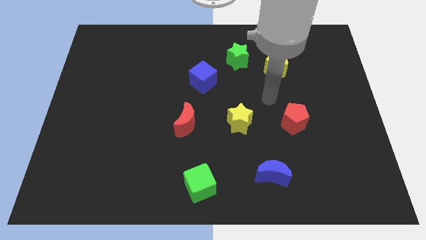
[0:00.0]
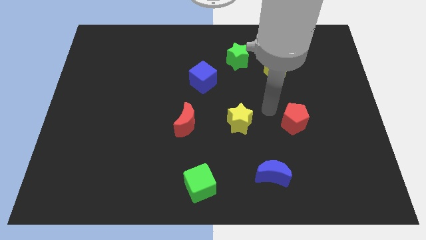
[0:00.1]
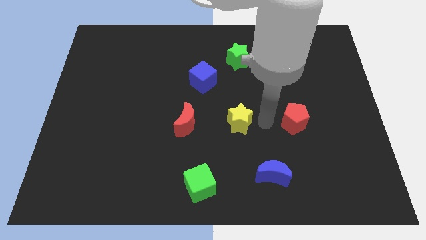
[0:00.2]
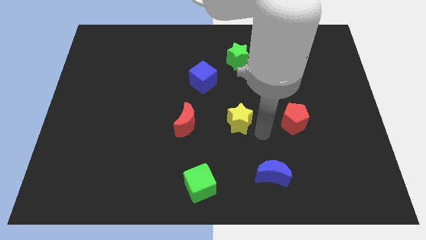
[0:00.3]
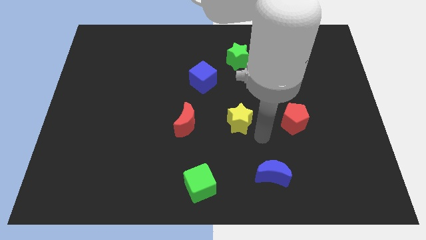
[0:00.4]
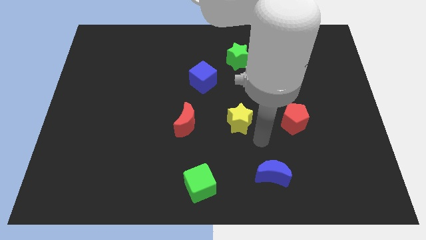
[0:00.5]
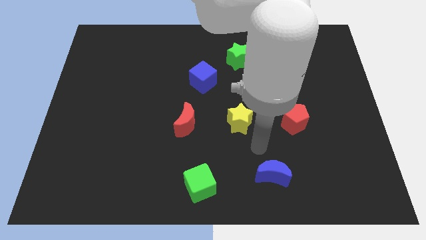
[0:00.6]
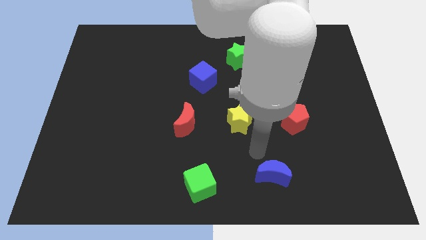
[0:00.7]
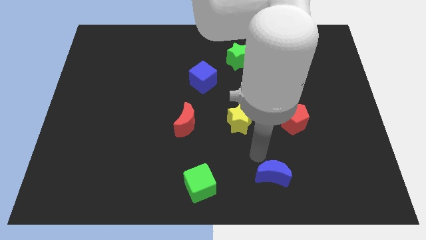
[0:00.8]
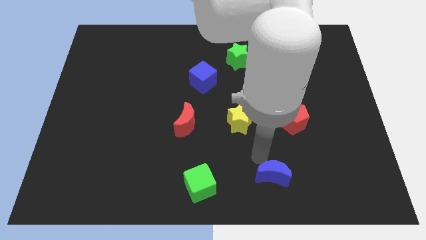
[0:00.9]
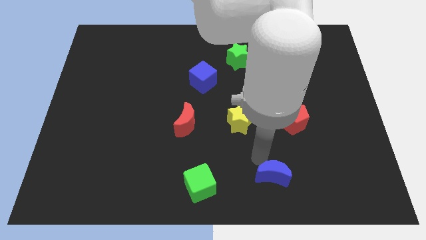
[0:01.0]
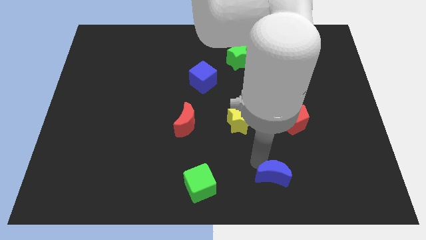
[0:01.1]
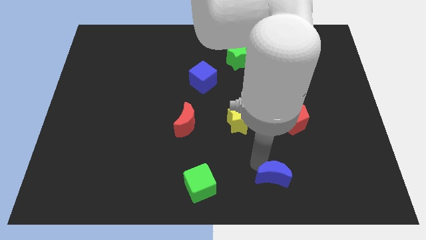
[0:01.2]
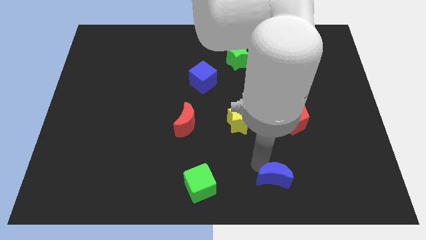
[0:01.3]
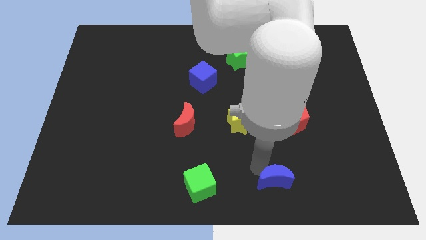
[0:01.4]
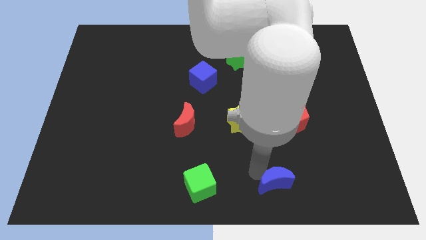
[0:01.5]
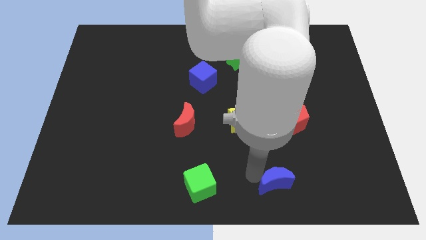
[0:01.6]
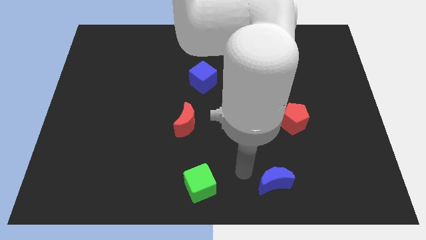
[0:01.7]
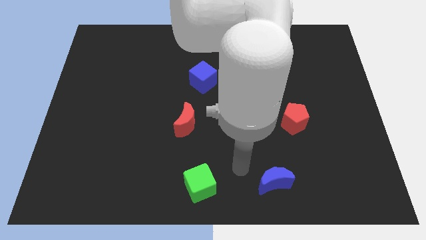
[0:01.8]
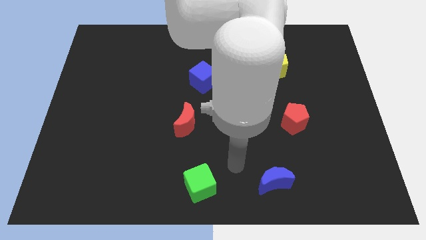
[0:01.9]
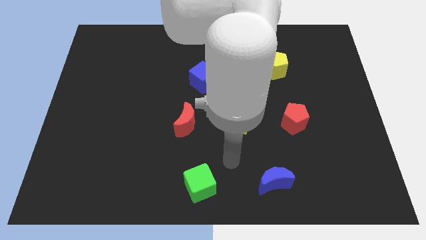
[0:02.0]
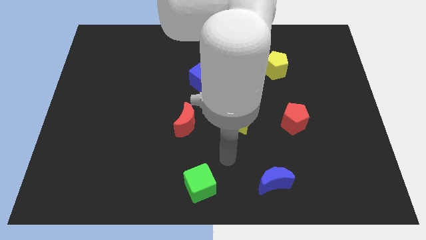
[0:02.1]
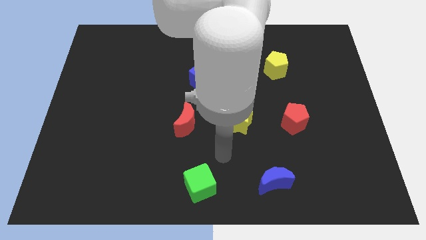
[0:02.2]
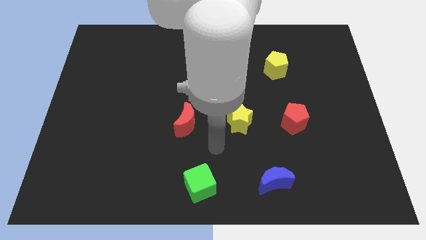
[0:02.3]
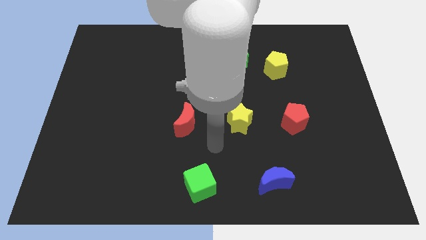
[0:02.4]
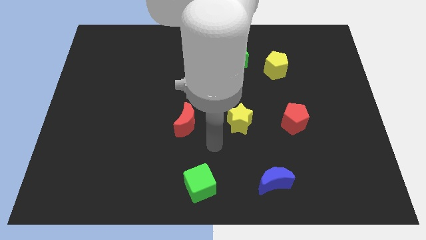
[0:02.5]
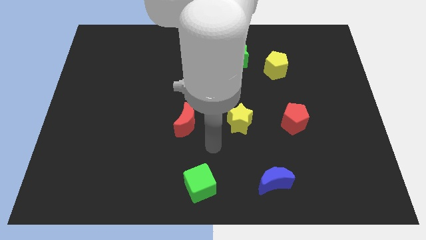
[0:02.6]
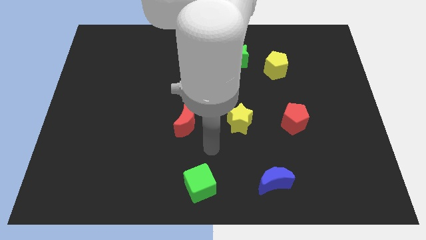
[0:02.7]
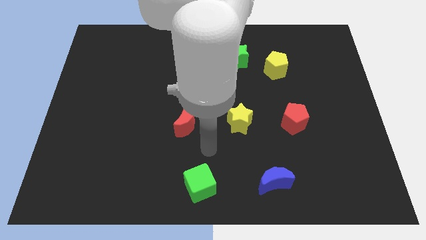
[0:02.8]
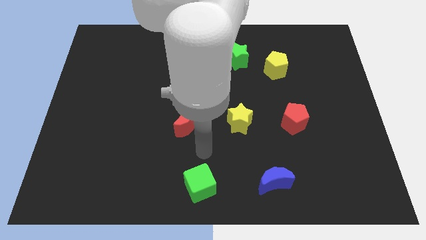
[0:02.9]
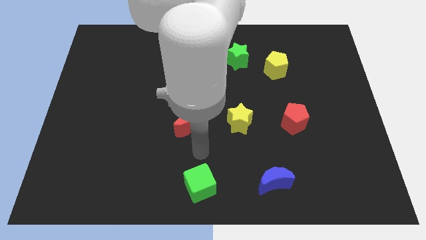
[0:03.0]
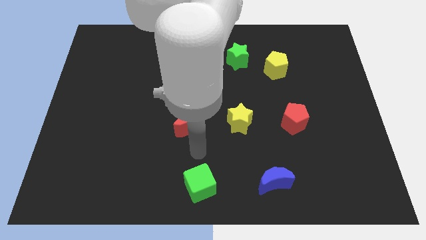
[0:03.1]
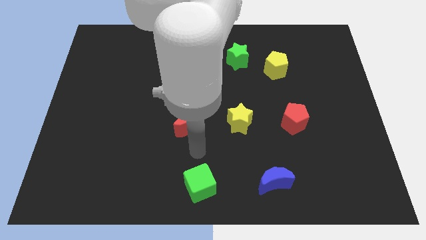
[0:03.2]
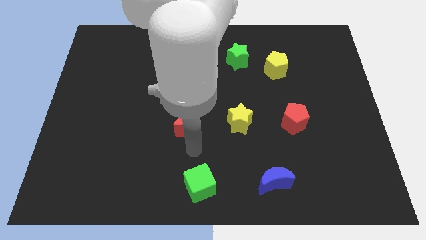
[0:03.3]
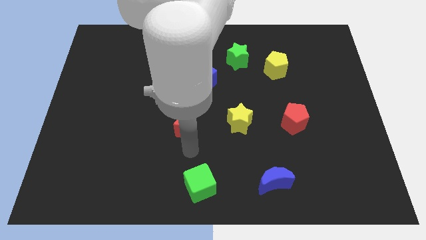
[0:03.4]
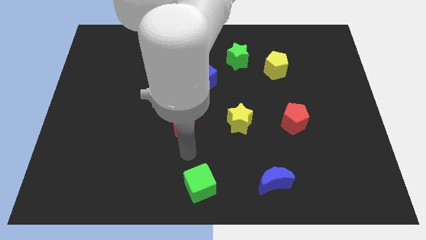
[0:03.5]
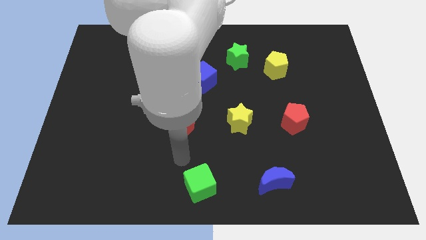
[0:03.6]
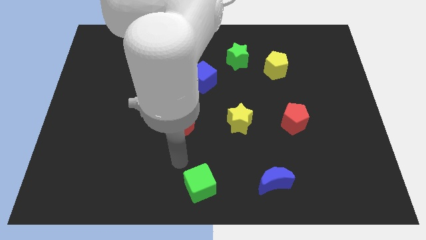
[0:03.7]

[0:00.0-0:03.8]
move the blue moon slightly to the down

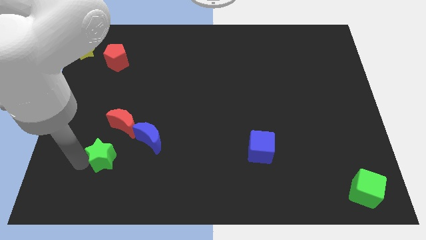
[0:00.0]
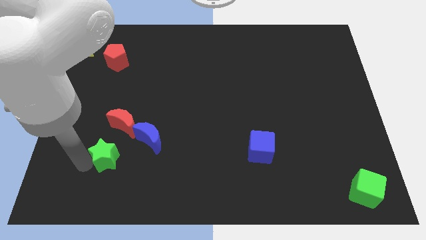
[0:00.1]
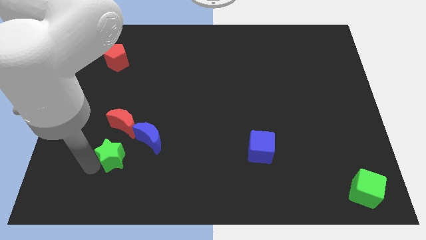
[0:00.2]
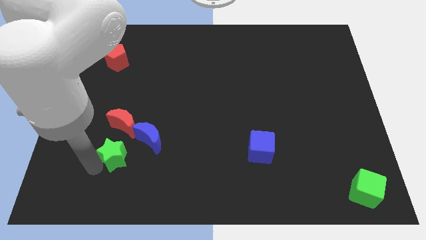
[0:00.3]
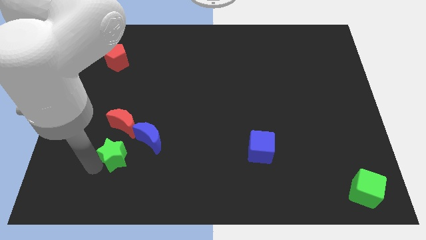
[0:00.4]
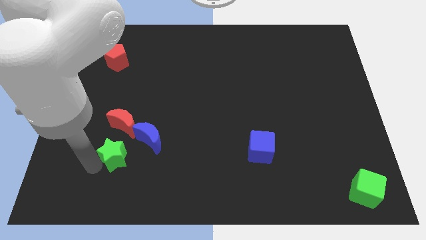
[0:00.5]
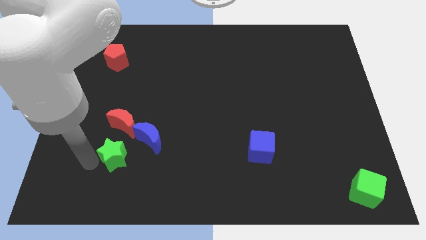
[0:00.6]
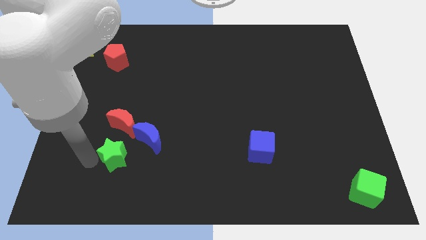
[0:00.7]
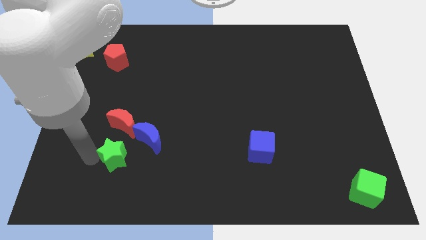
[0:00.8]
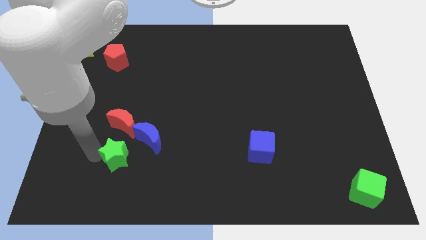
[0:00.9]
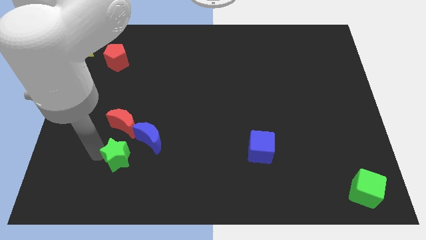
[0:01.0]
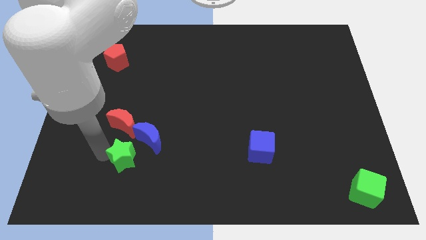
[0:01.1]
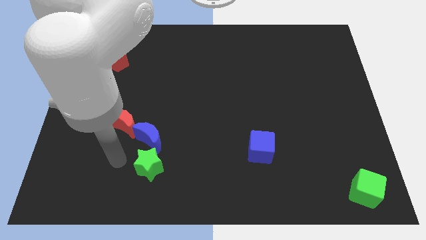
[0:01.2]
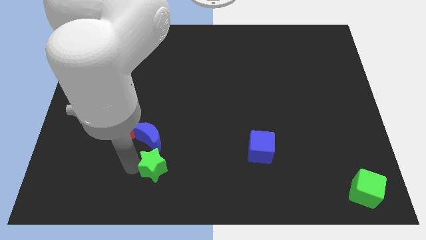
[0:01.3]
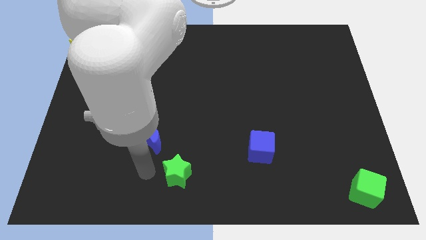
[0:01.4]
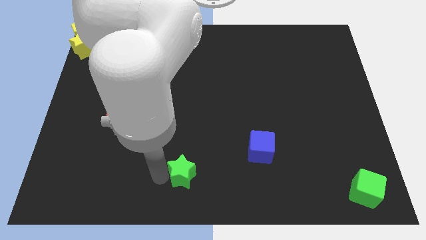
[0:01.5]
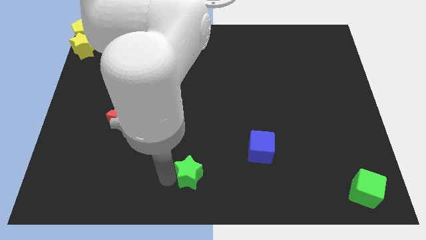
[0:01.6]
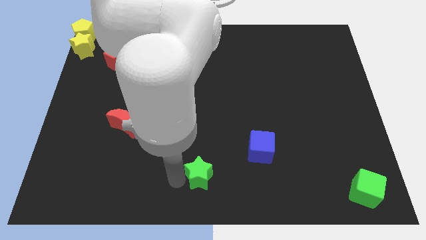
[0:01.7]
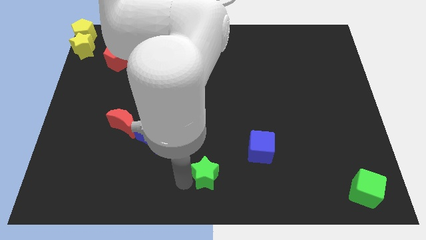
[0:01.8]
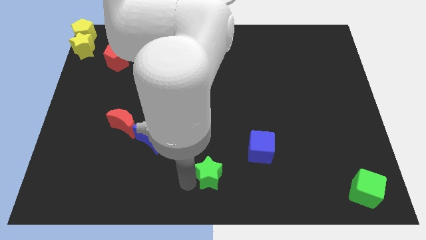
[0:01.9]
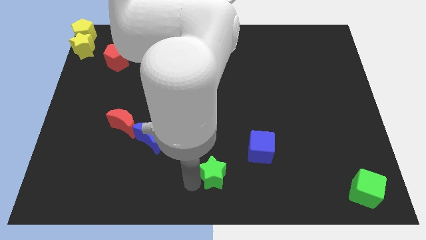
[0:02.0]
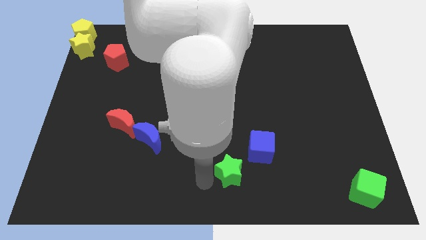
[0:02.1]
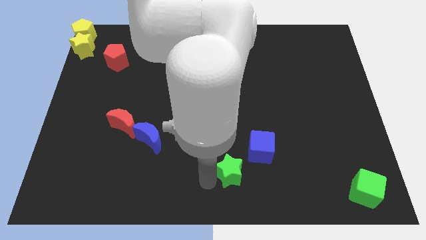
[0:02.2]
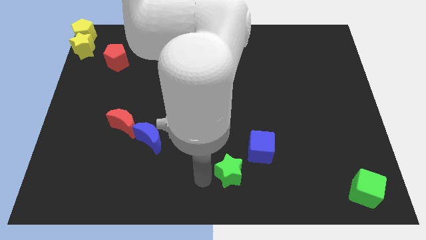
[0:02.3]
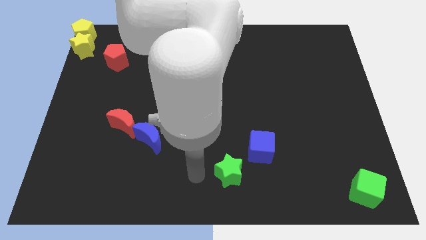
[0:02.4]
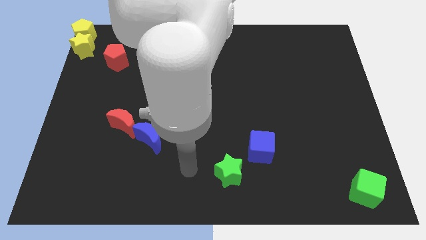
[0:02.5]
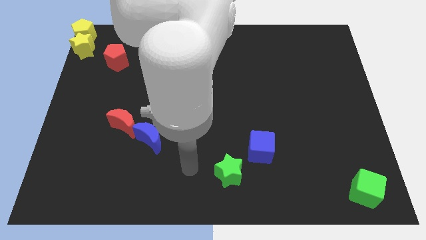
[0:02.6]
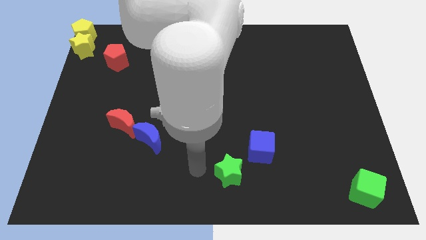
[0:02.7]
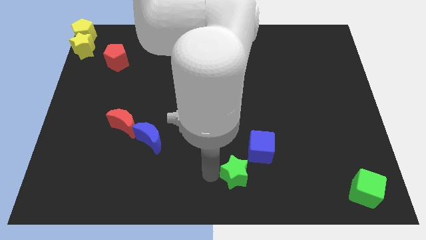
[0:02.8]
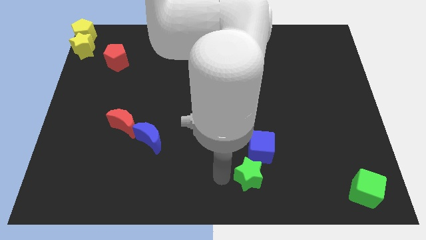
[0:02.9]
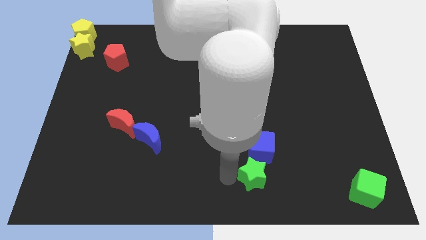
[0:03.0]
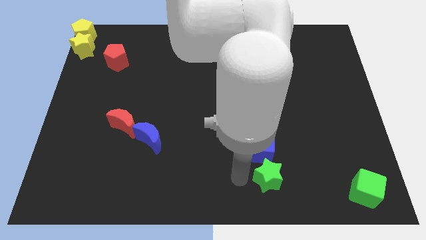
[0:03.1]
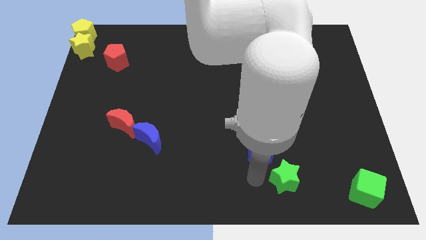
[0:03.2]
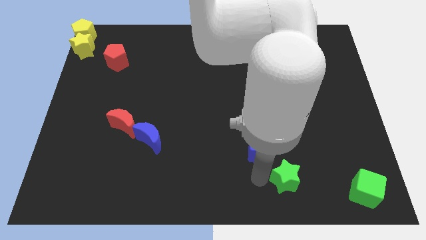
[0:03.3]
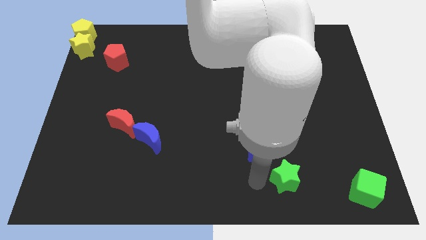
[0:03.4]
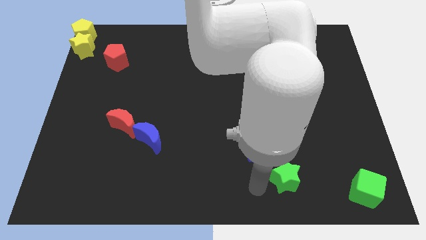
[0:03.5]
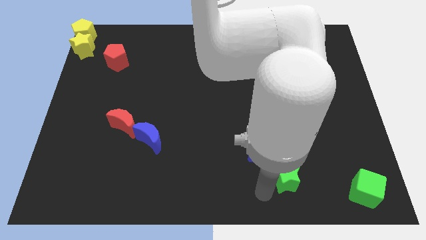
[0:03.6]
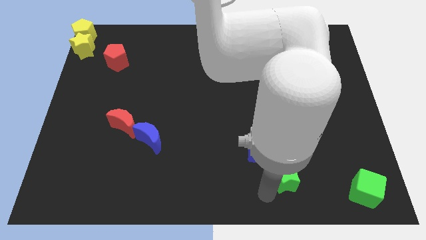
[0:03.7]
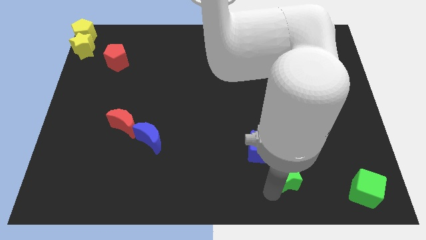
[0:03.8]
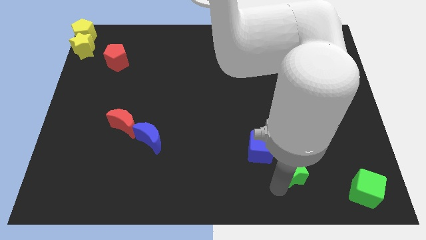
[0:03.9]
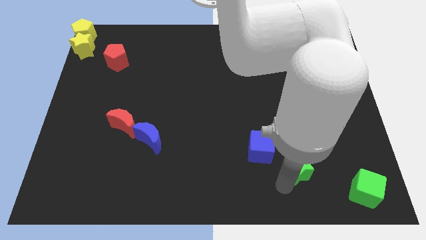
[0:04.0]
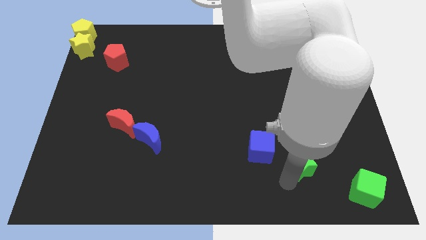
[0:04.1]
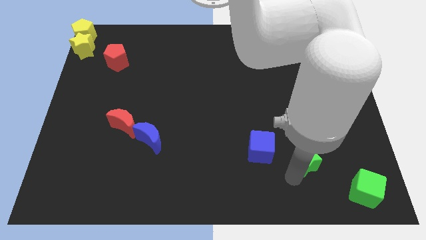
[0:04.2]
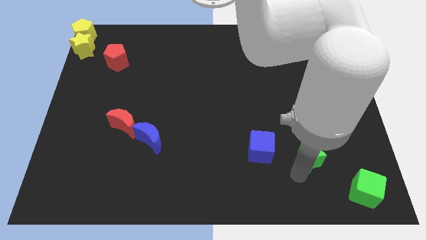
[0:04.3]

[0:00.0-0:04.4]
slide the green star diagonally in between the green cube and blue cube

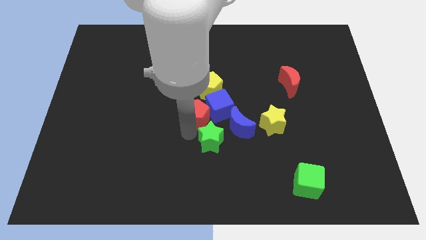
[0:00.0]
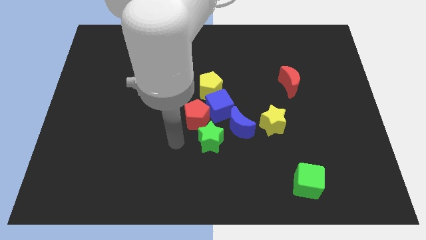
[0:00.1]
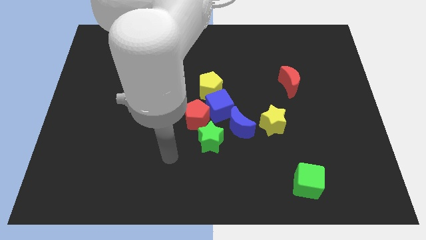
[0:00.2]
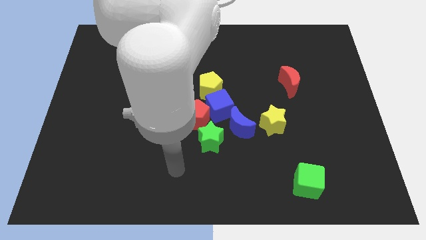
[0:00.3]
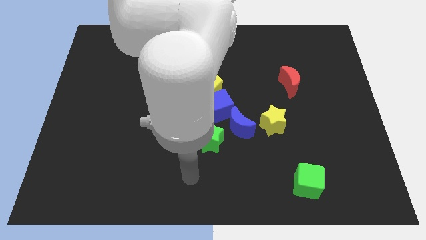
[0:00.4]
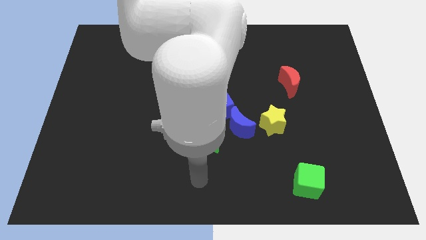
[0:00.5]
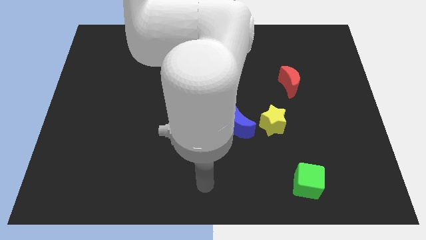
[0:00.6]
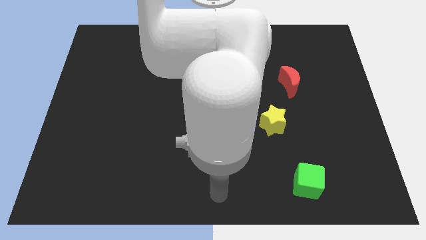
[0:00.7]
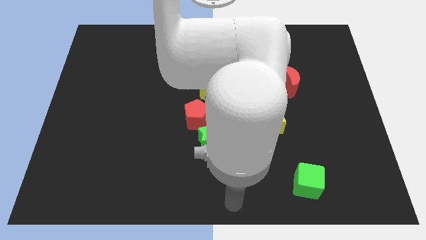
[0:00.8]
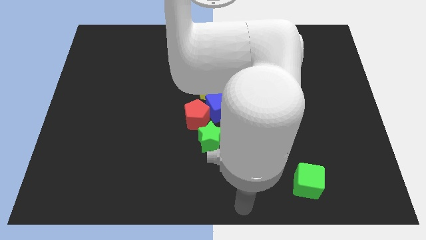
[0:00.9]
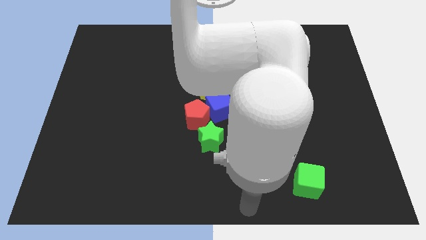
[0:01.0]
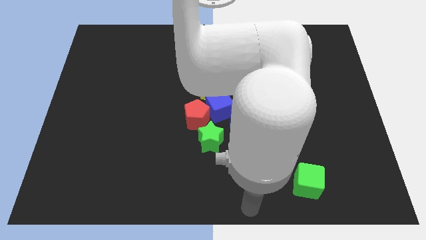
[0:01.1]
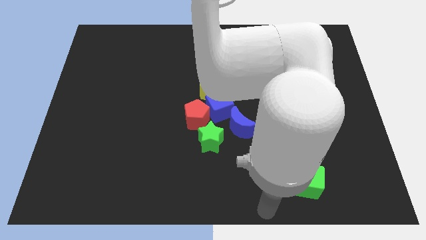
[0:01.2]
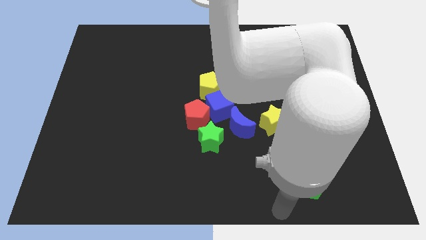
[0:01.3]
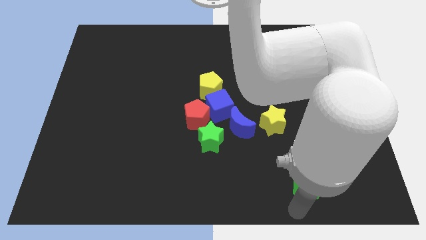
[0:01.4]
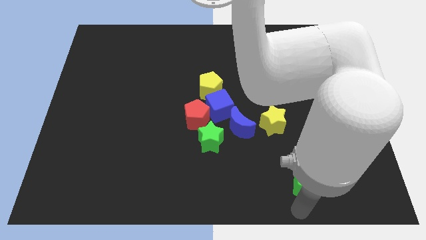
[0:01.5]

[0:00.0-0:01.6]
move away from the red pentagon
